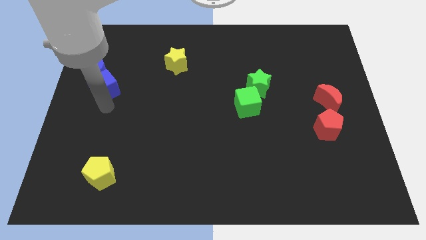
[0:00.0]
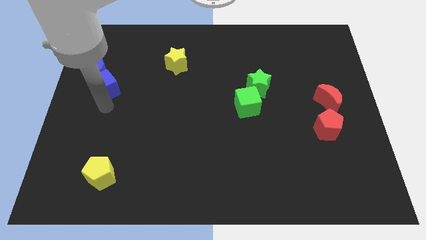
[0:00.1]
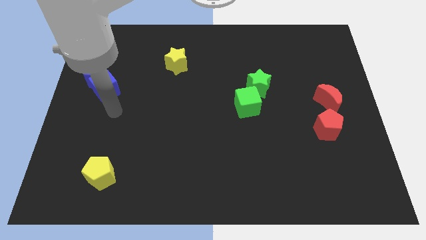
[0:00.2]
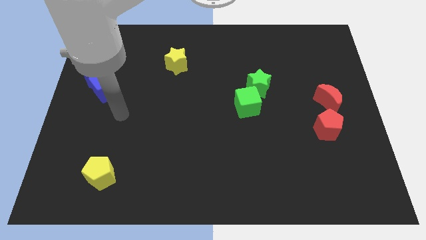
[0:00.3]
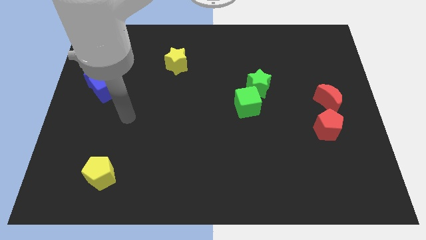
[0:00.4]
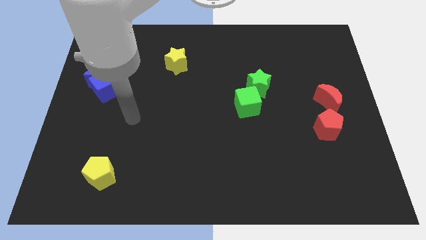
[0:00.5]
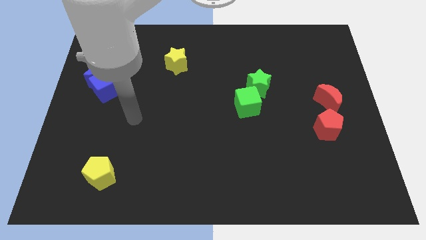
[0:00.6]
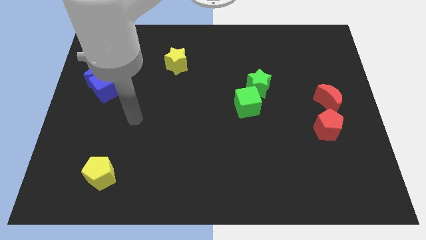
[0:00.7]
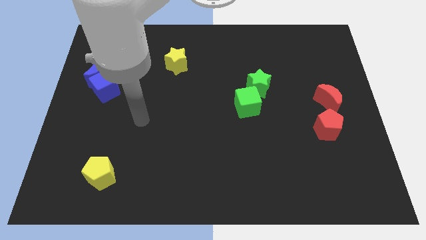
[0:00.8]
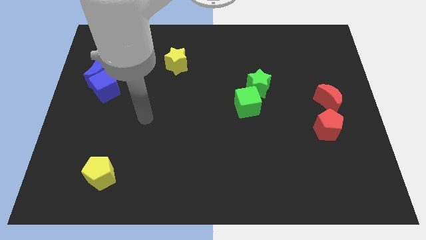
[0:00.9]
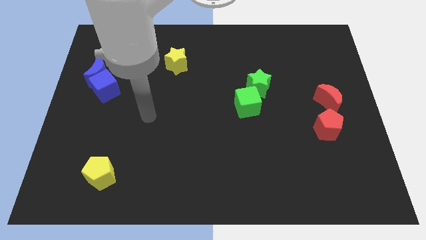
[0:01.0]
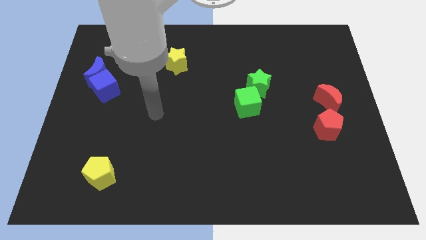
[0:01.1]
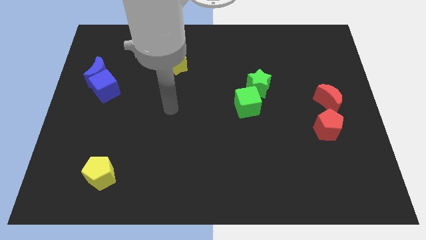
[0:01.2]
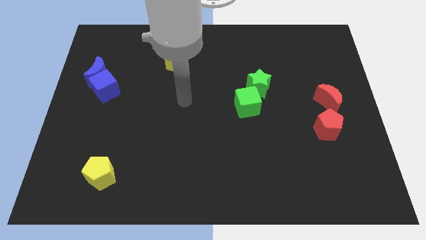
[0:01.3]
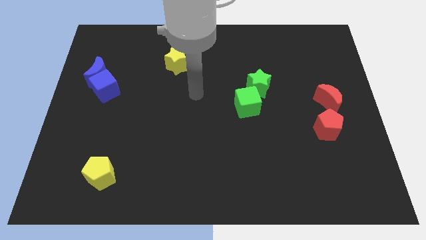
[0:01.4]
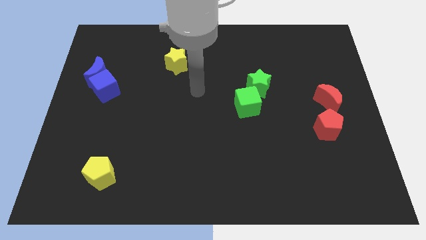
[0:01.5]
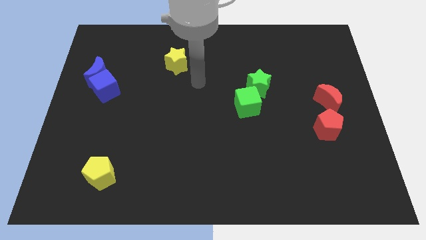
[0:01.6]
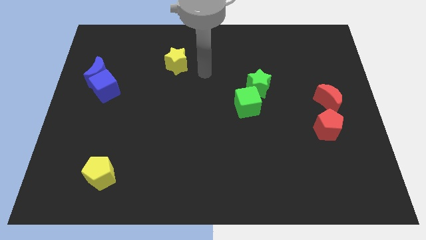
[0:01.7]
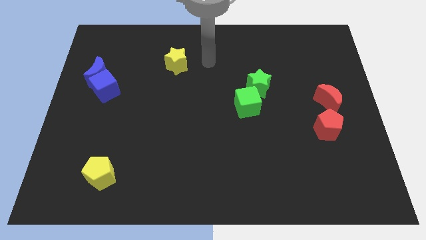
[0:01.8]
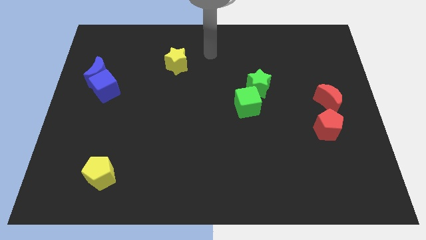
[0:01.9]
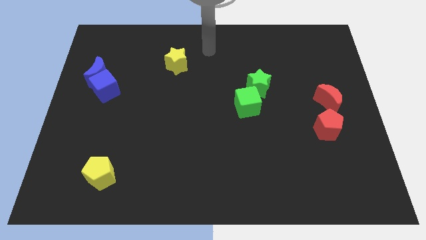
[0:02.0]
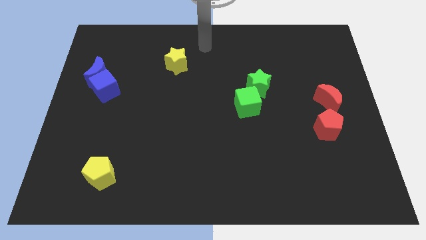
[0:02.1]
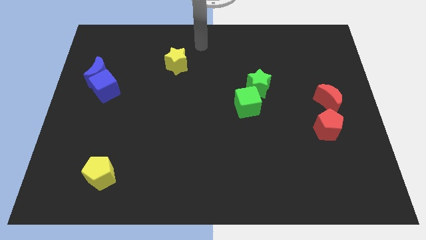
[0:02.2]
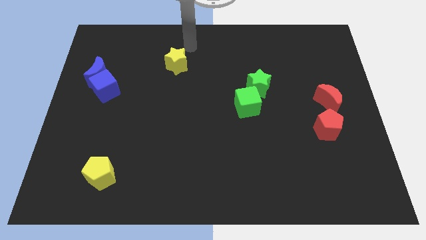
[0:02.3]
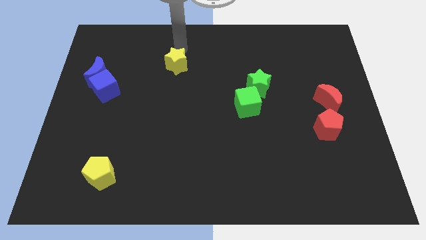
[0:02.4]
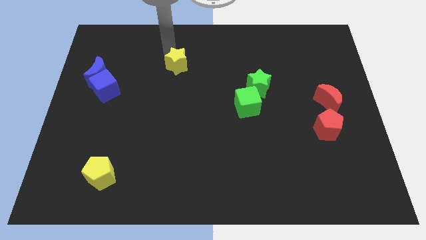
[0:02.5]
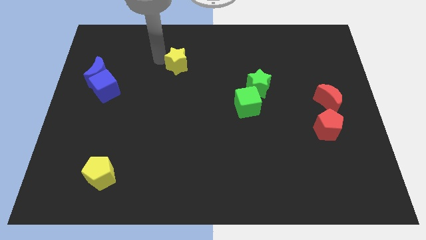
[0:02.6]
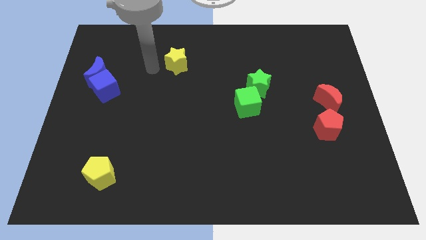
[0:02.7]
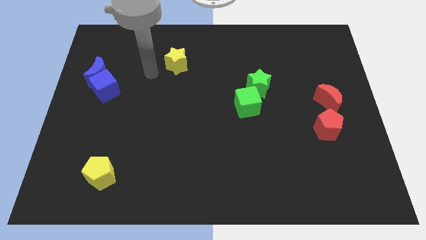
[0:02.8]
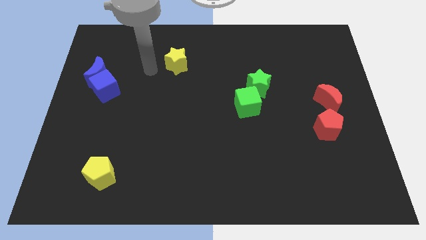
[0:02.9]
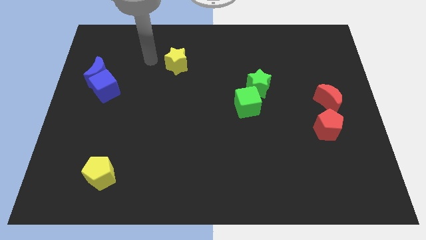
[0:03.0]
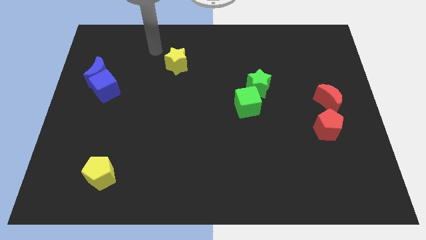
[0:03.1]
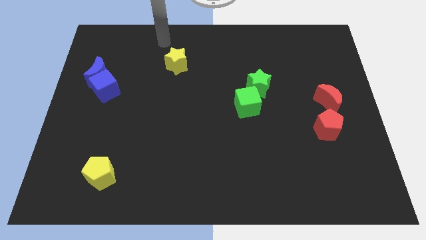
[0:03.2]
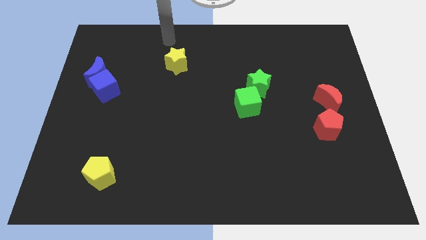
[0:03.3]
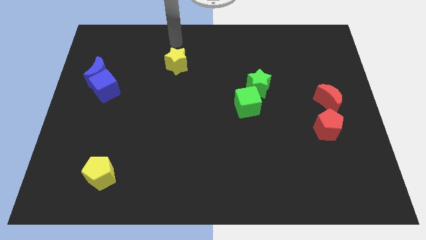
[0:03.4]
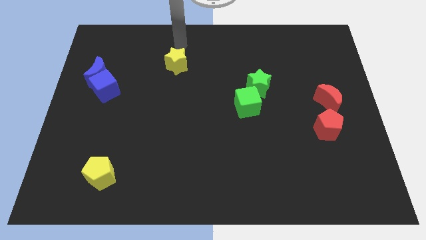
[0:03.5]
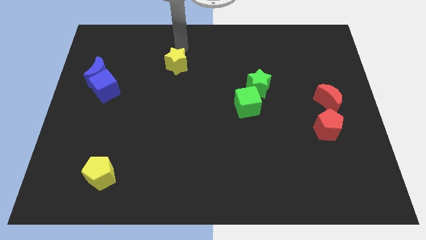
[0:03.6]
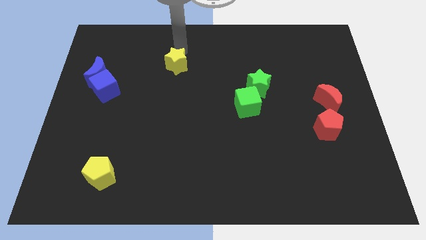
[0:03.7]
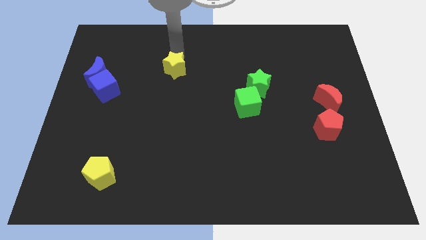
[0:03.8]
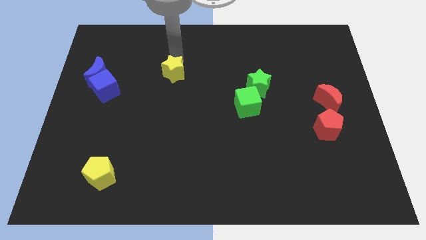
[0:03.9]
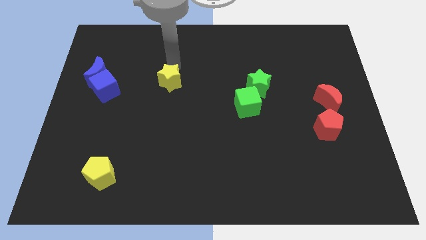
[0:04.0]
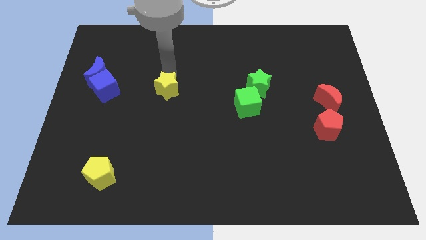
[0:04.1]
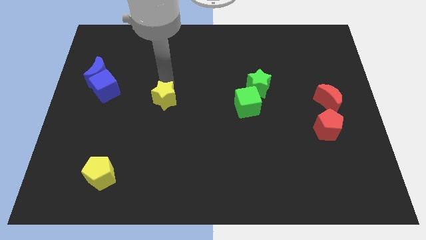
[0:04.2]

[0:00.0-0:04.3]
move the yellow star to the right side of the blue cube

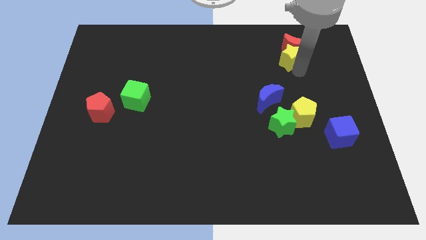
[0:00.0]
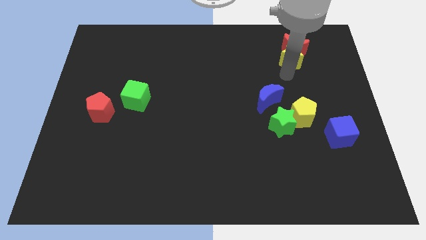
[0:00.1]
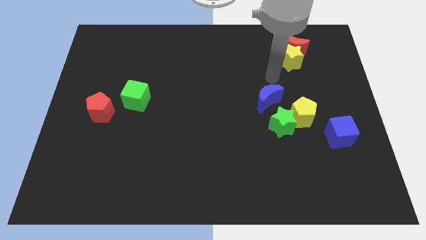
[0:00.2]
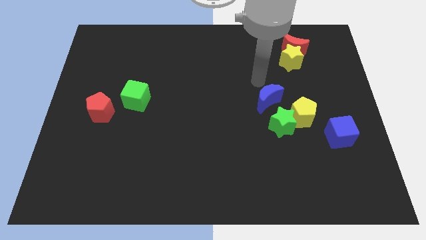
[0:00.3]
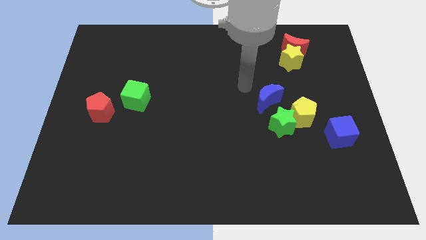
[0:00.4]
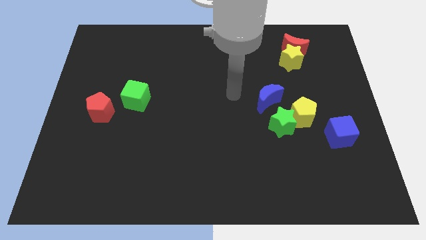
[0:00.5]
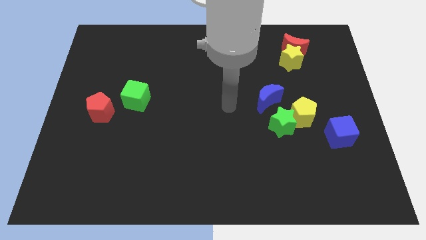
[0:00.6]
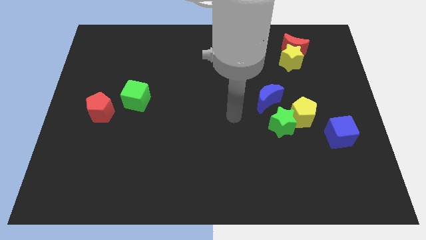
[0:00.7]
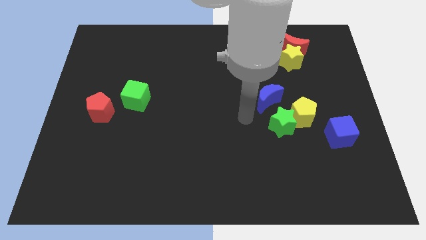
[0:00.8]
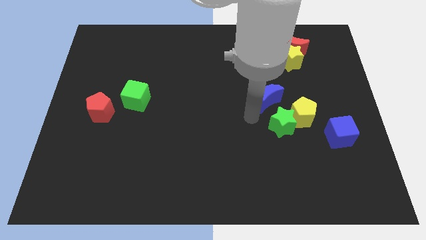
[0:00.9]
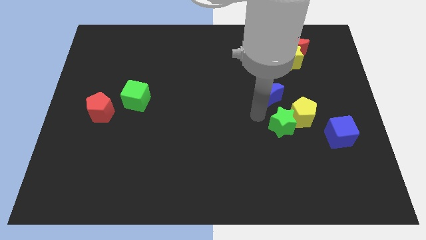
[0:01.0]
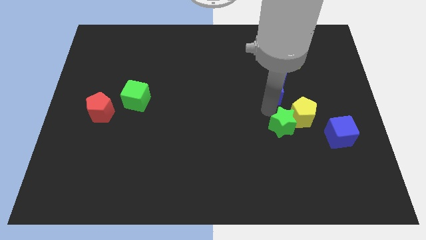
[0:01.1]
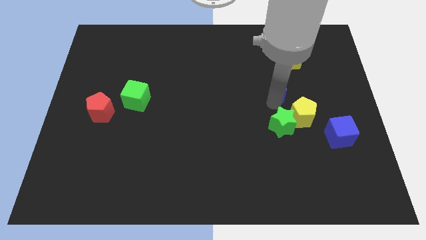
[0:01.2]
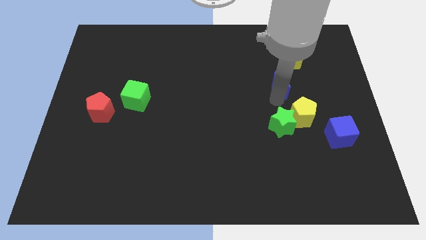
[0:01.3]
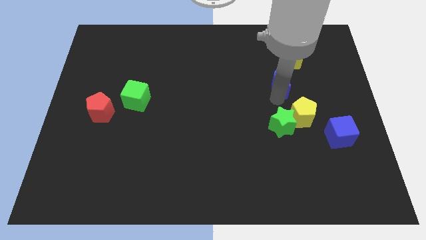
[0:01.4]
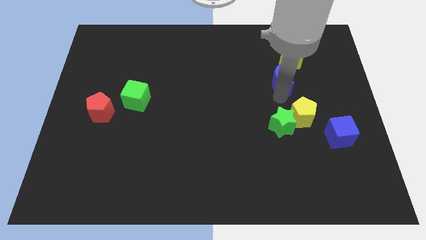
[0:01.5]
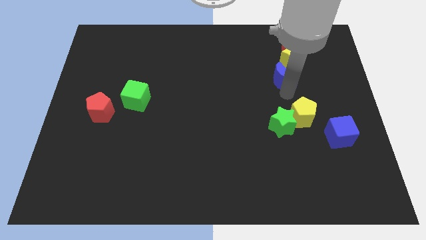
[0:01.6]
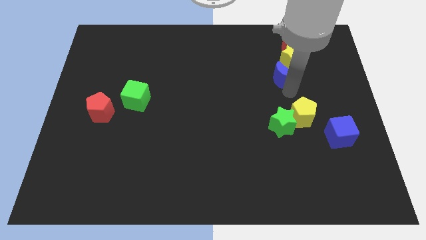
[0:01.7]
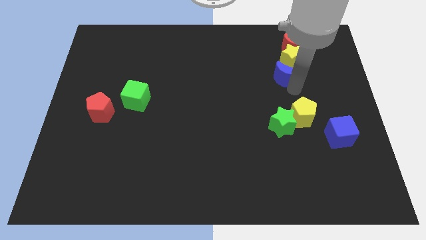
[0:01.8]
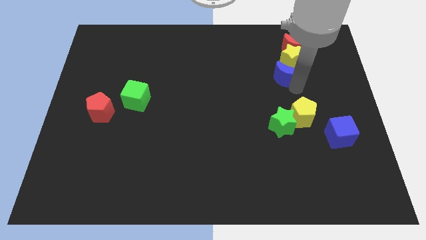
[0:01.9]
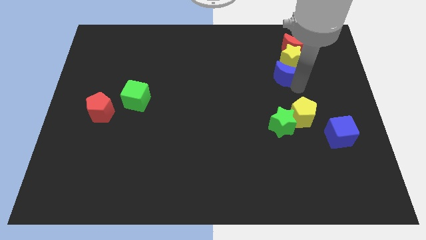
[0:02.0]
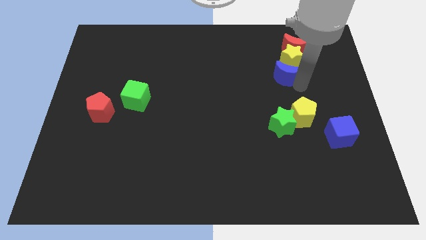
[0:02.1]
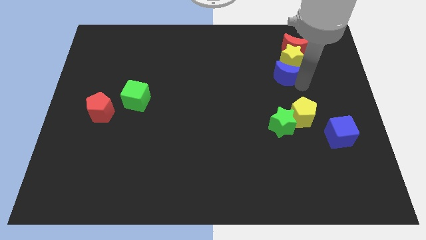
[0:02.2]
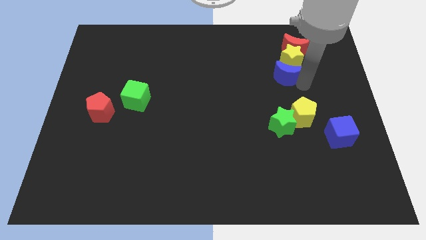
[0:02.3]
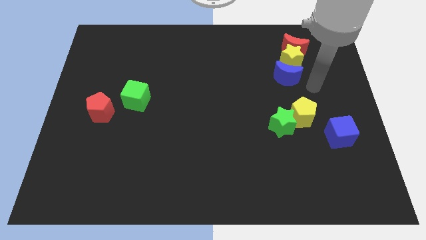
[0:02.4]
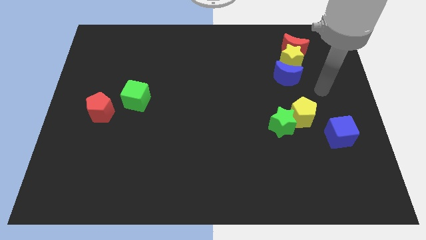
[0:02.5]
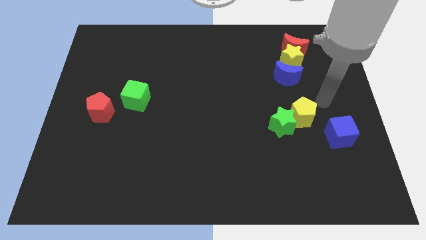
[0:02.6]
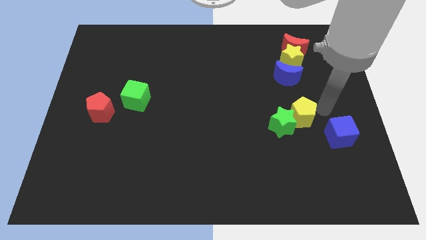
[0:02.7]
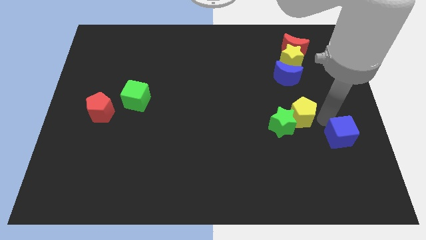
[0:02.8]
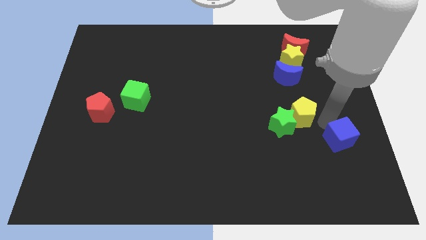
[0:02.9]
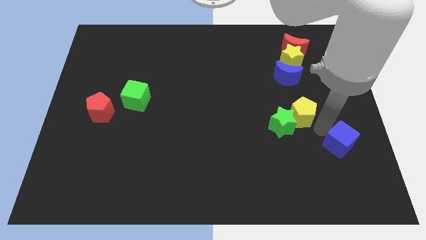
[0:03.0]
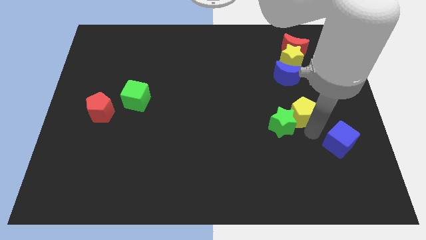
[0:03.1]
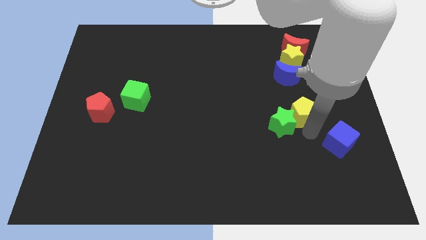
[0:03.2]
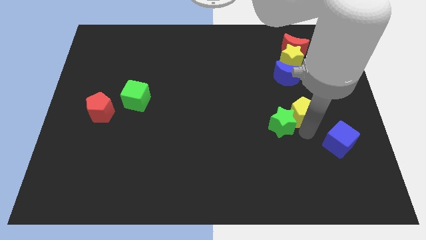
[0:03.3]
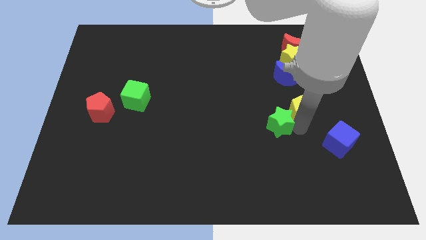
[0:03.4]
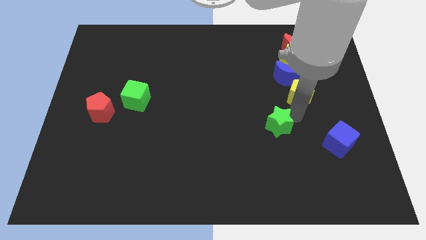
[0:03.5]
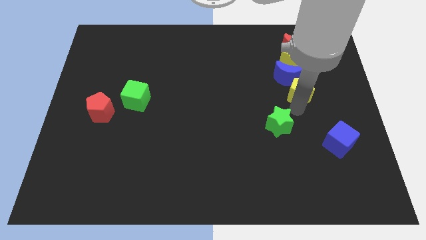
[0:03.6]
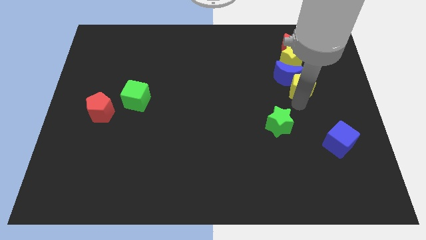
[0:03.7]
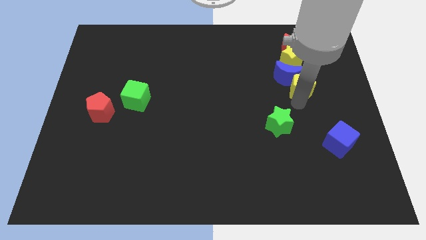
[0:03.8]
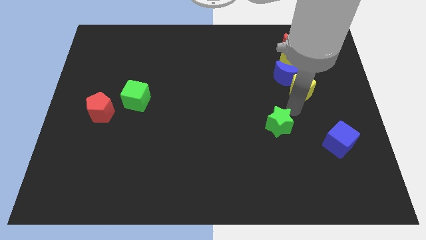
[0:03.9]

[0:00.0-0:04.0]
drag the blue cube below the yellow satr

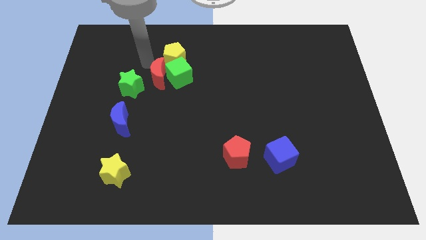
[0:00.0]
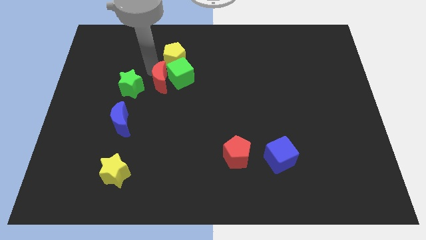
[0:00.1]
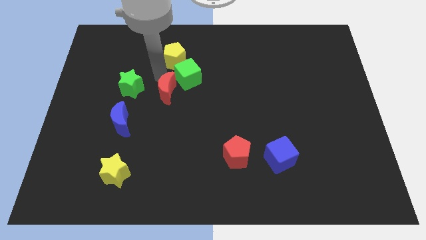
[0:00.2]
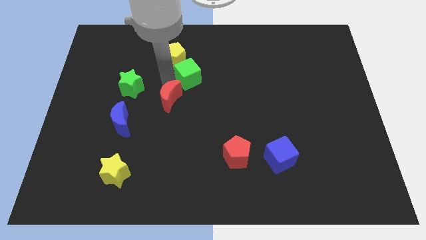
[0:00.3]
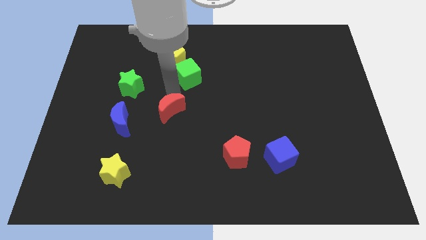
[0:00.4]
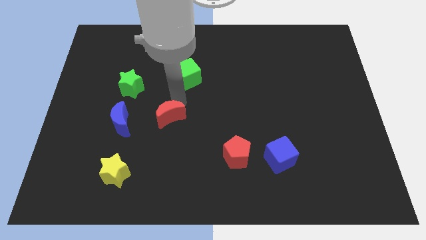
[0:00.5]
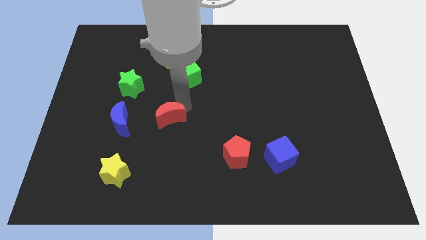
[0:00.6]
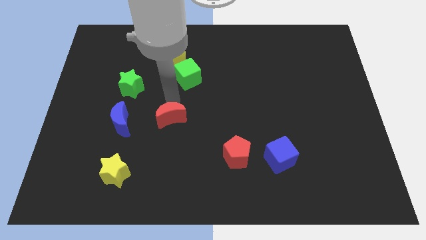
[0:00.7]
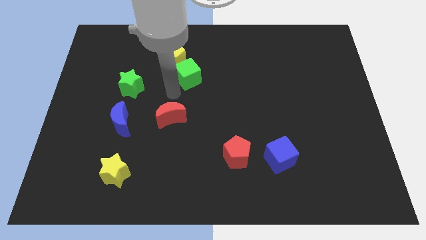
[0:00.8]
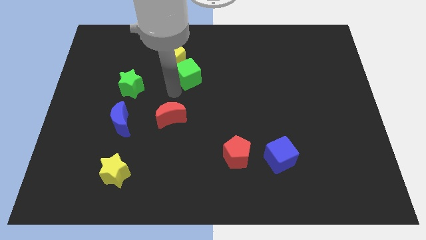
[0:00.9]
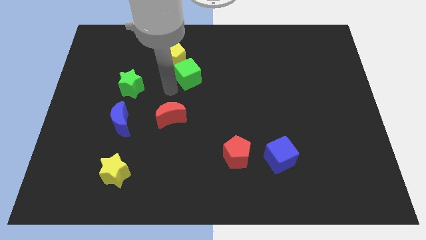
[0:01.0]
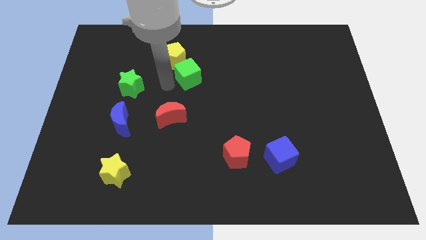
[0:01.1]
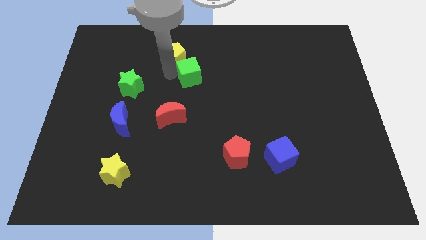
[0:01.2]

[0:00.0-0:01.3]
push red moon near blue moon
